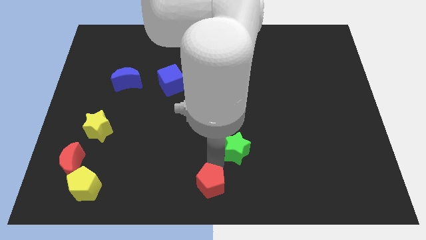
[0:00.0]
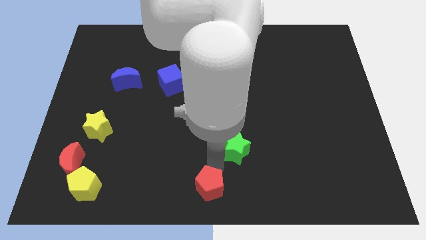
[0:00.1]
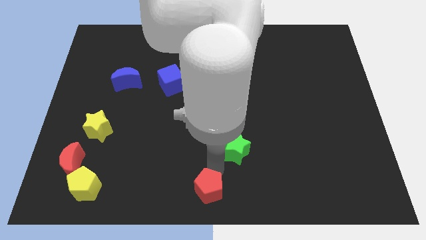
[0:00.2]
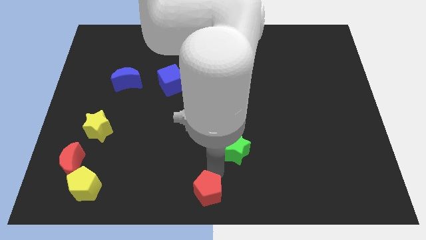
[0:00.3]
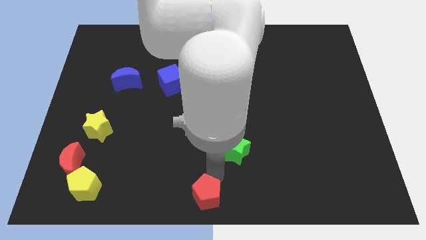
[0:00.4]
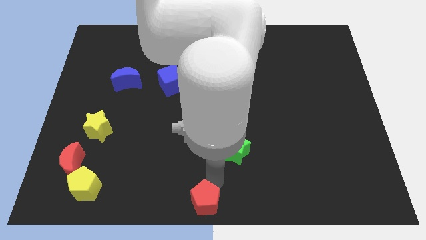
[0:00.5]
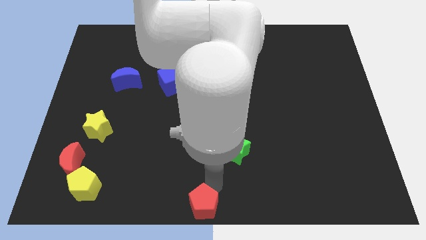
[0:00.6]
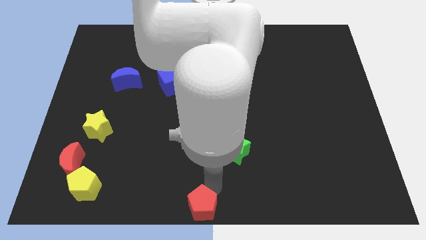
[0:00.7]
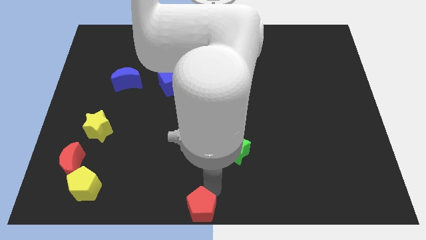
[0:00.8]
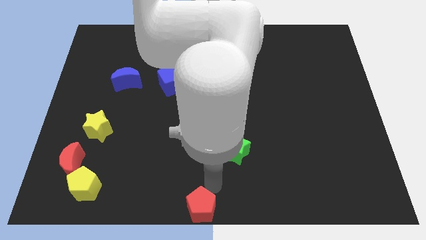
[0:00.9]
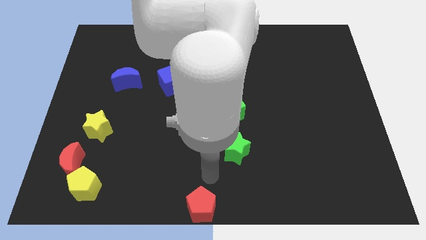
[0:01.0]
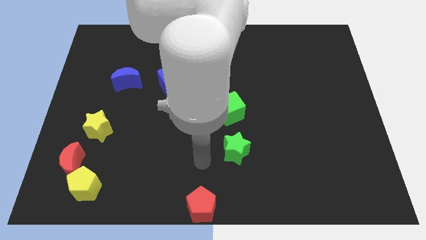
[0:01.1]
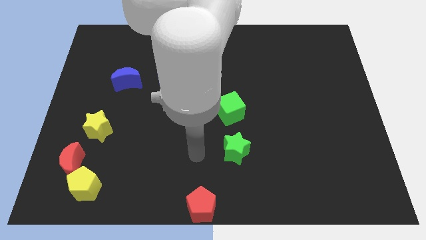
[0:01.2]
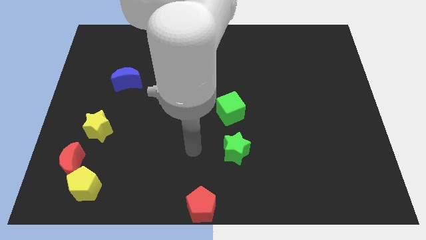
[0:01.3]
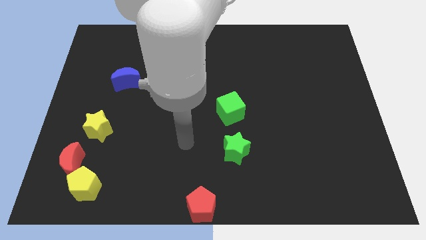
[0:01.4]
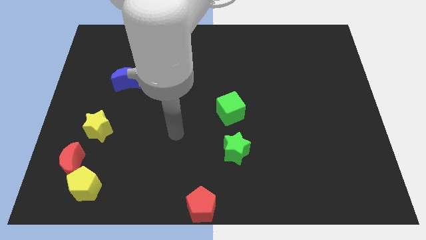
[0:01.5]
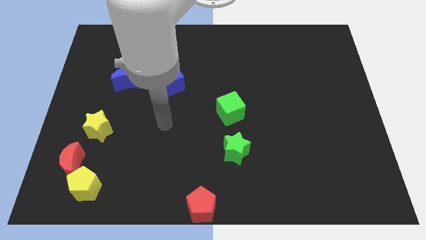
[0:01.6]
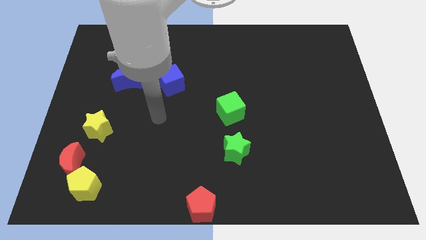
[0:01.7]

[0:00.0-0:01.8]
place the red pentagon at the bottom center of the board

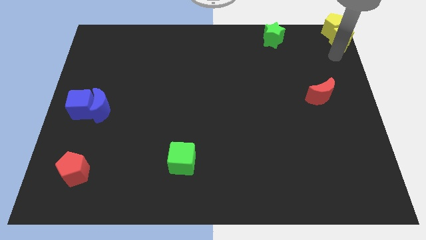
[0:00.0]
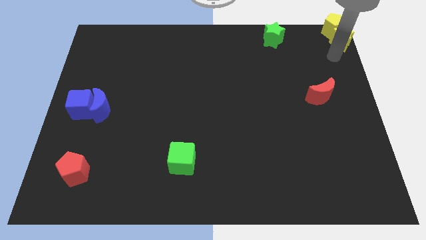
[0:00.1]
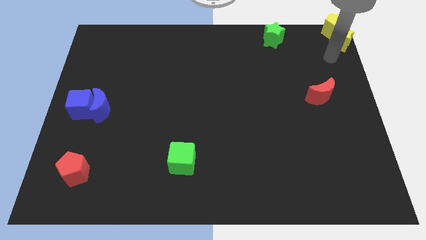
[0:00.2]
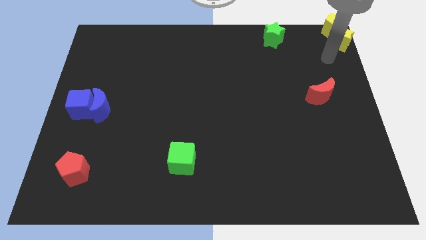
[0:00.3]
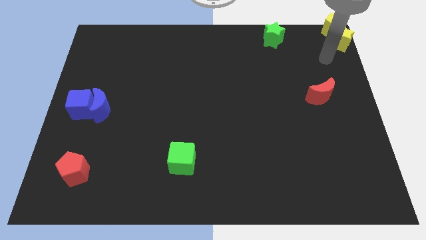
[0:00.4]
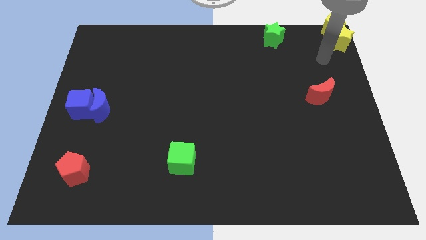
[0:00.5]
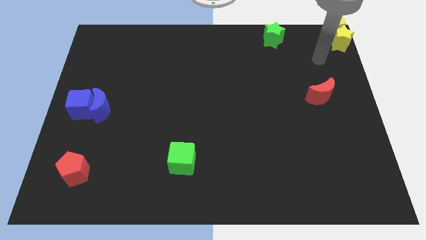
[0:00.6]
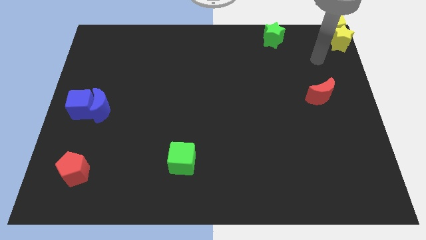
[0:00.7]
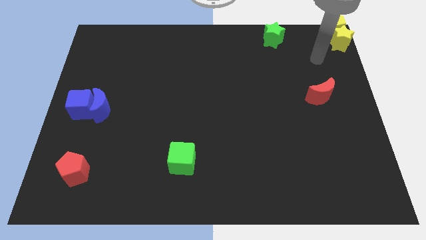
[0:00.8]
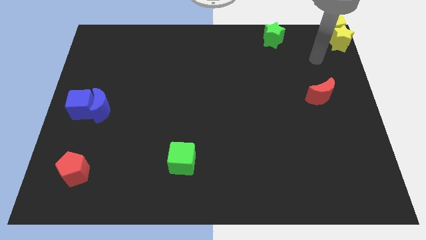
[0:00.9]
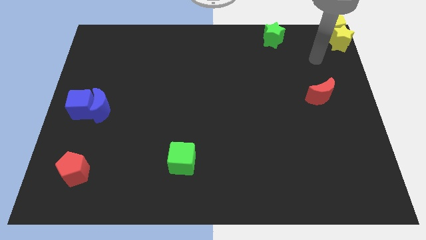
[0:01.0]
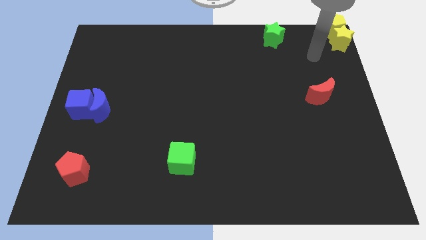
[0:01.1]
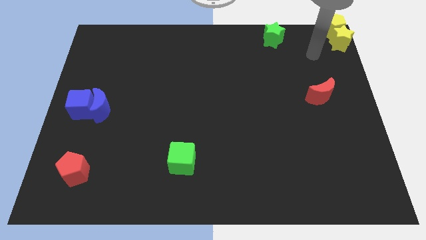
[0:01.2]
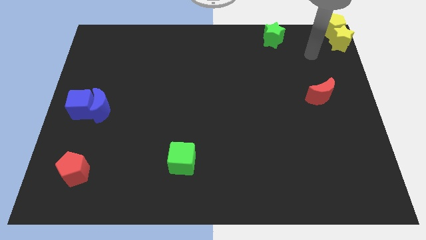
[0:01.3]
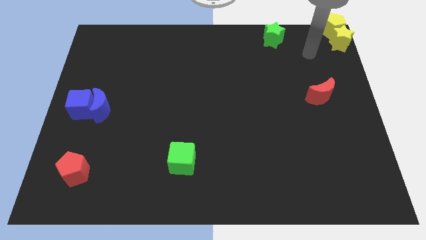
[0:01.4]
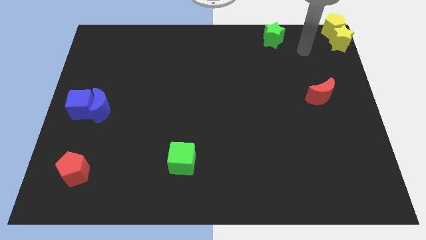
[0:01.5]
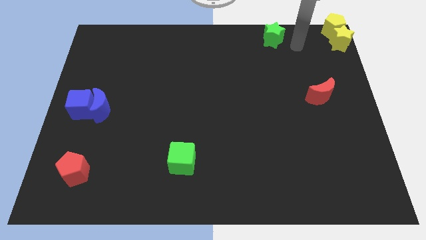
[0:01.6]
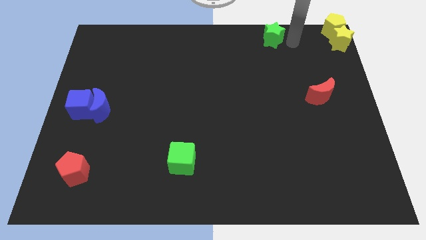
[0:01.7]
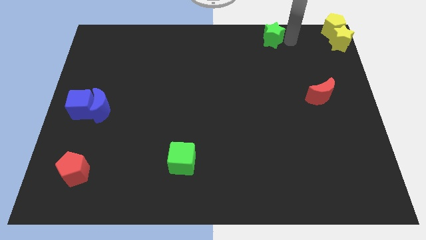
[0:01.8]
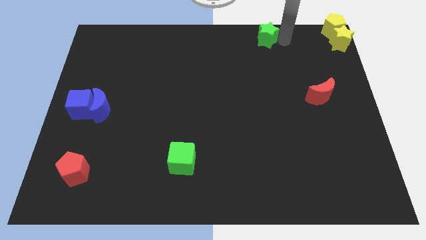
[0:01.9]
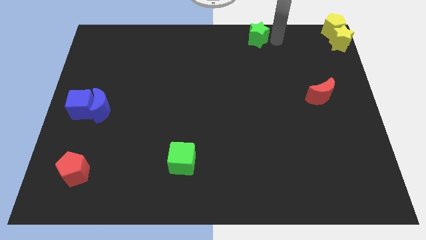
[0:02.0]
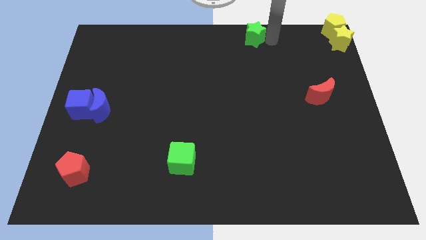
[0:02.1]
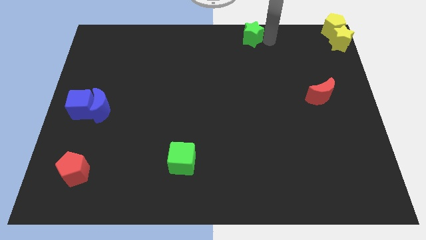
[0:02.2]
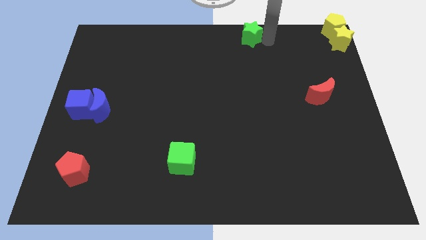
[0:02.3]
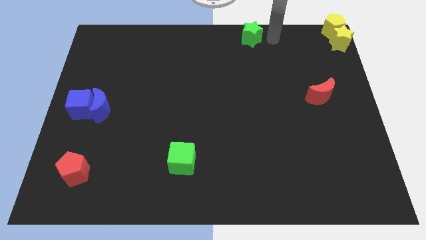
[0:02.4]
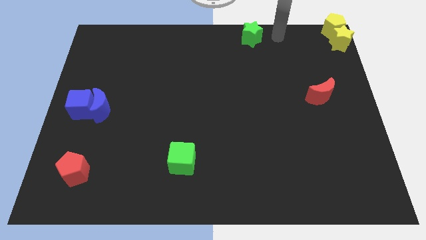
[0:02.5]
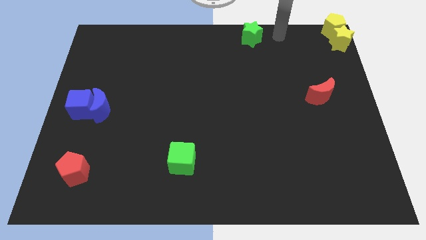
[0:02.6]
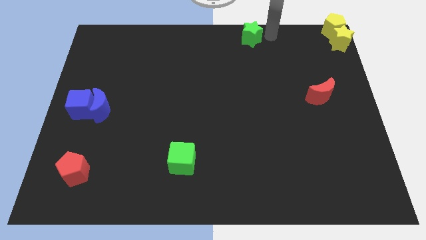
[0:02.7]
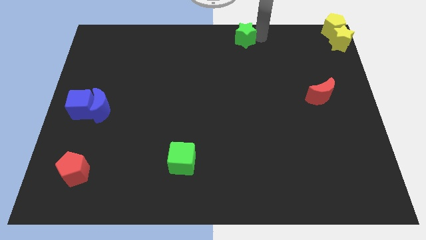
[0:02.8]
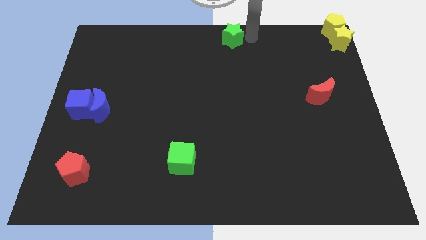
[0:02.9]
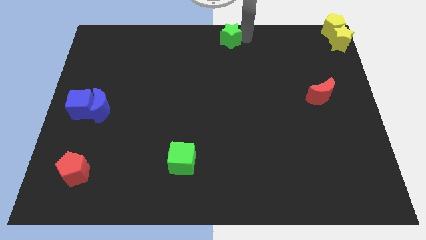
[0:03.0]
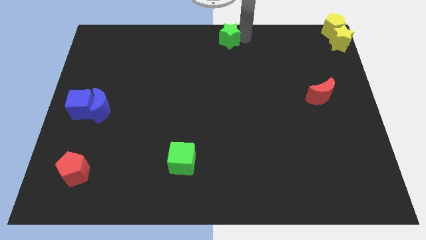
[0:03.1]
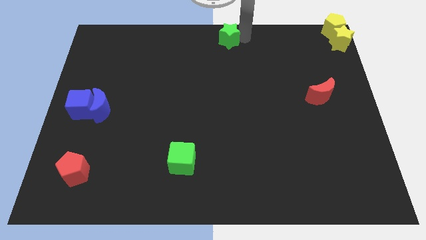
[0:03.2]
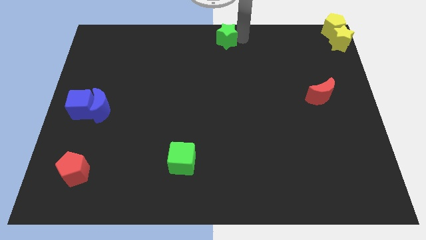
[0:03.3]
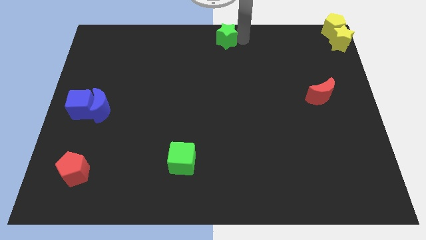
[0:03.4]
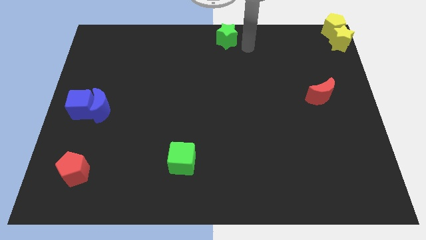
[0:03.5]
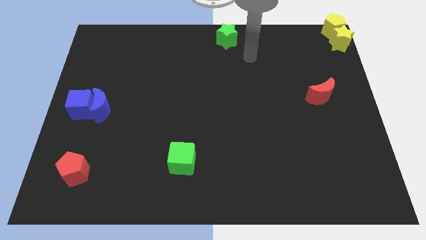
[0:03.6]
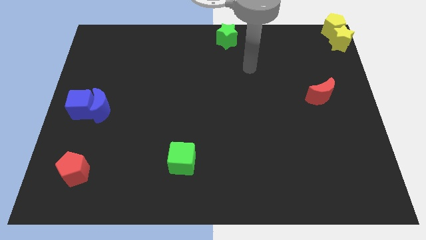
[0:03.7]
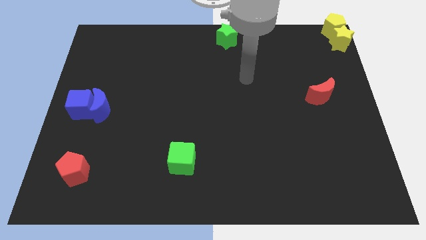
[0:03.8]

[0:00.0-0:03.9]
slide the green star slightly to the left

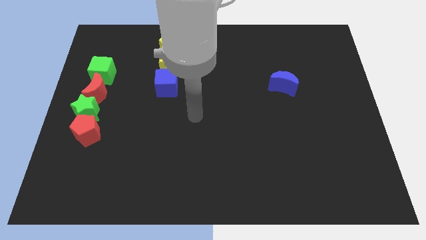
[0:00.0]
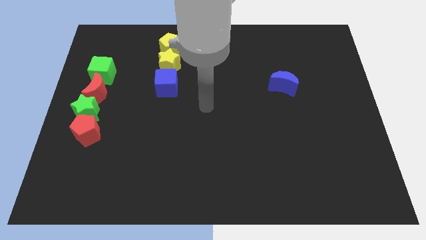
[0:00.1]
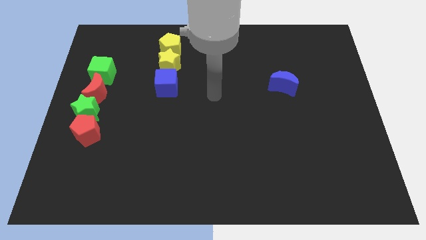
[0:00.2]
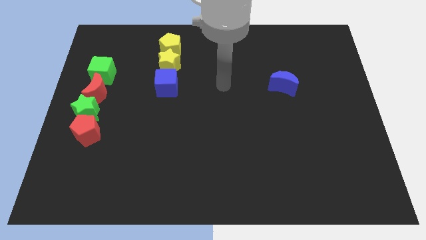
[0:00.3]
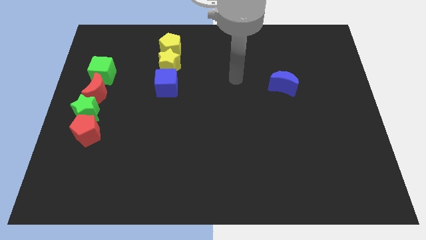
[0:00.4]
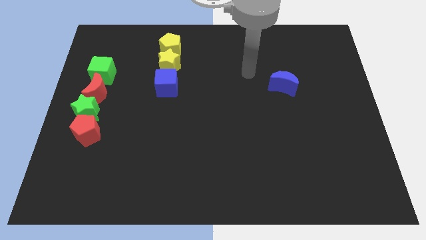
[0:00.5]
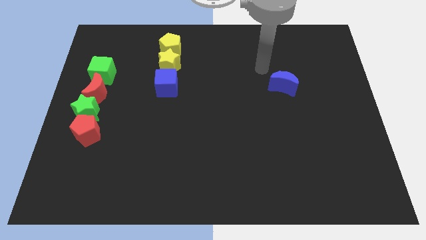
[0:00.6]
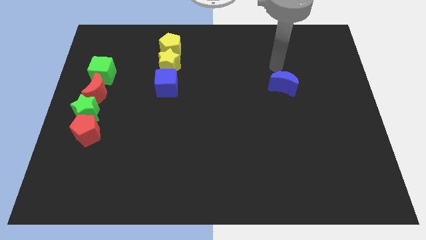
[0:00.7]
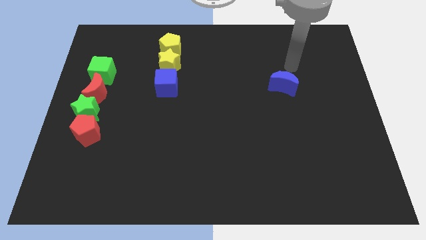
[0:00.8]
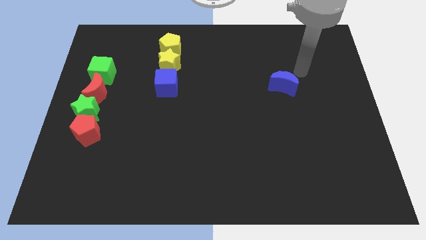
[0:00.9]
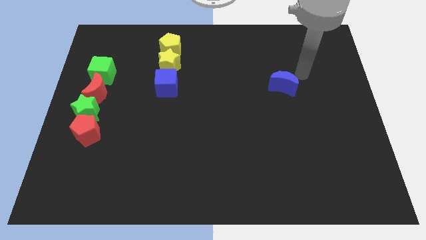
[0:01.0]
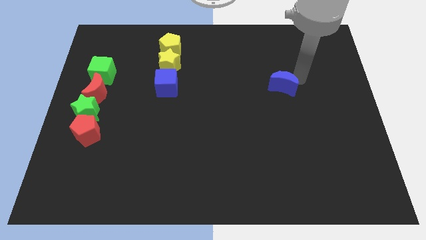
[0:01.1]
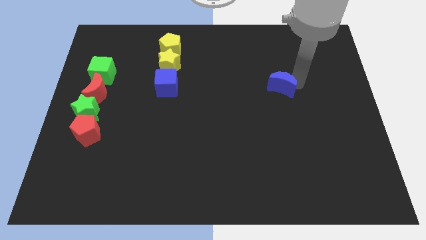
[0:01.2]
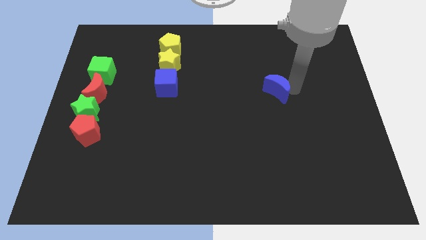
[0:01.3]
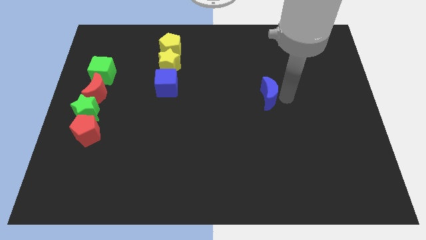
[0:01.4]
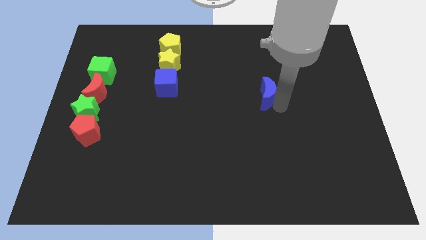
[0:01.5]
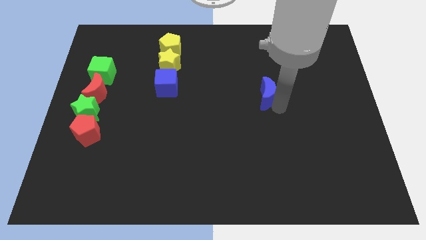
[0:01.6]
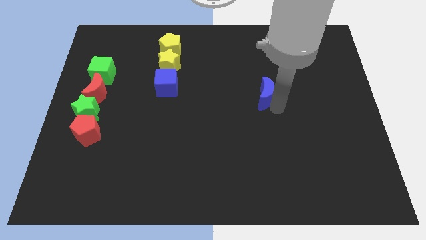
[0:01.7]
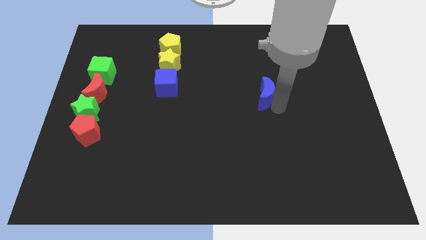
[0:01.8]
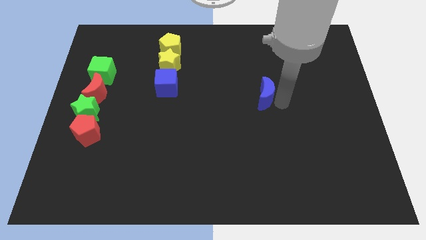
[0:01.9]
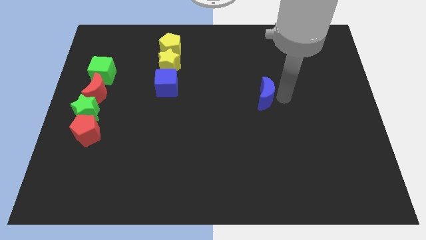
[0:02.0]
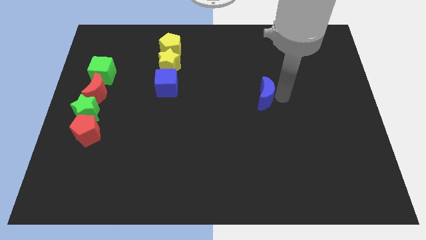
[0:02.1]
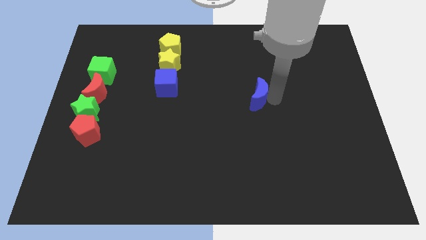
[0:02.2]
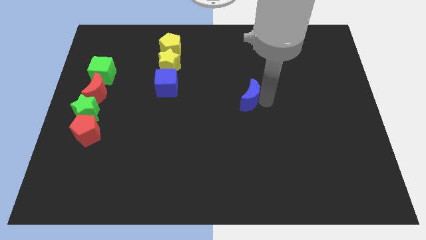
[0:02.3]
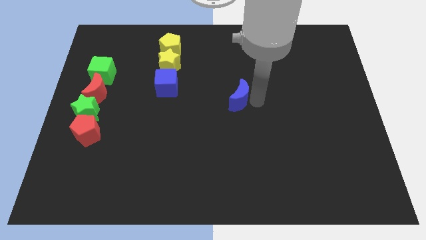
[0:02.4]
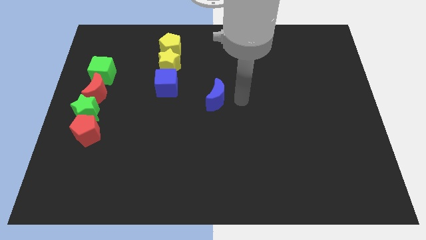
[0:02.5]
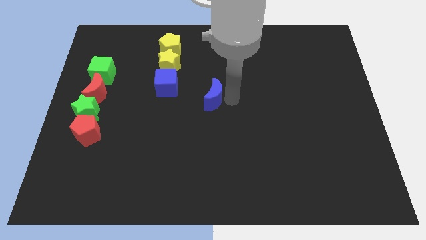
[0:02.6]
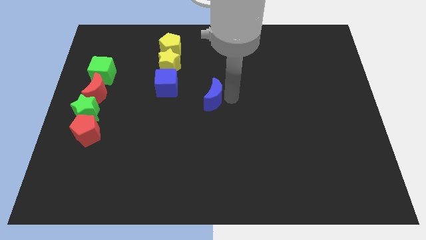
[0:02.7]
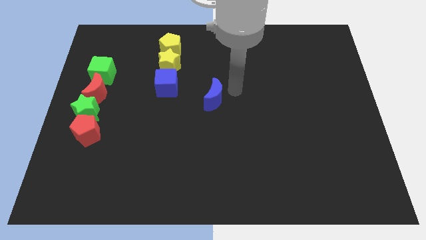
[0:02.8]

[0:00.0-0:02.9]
move blue moon to the left

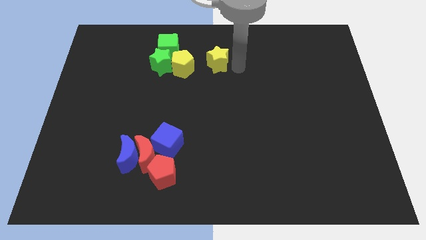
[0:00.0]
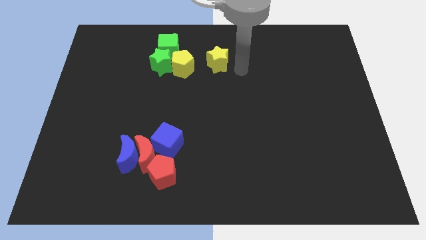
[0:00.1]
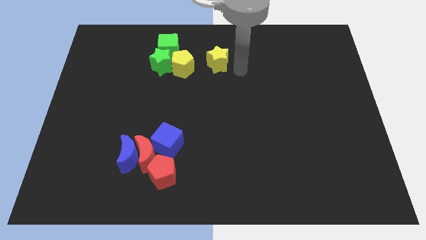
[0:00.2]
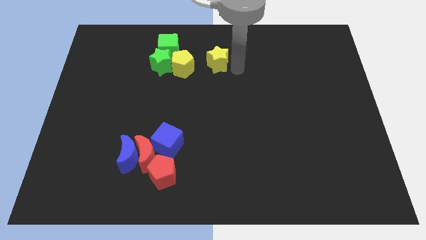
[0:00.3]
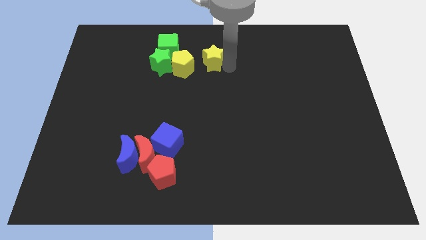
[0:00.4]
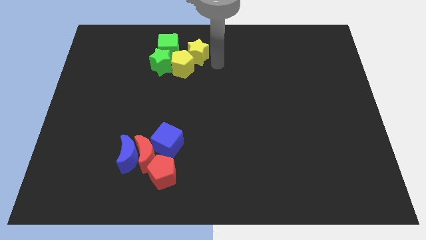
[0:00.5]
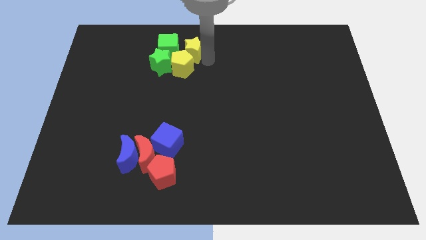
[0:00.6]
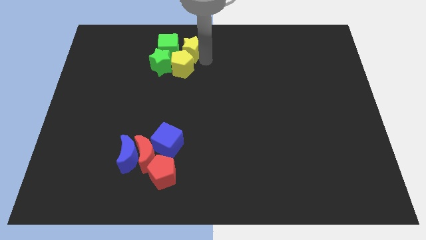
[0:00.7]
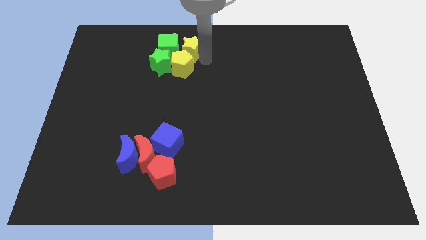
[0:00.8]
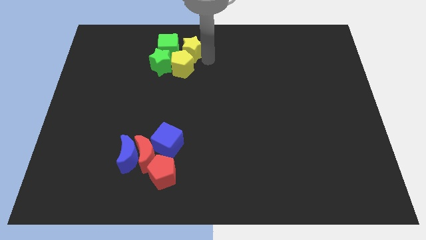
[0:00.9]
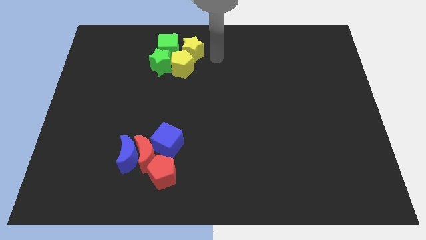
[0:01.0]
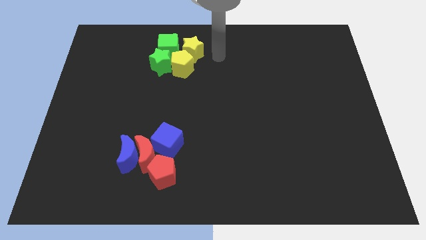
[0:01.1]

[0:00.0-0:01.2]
move the yellow star right to green cube
